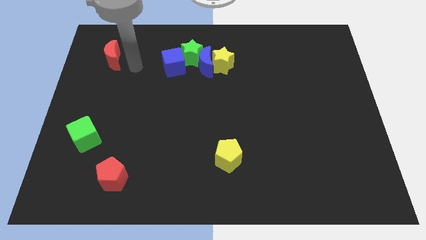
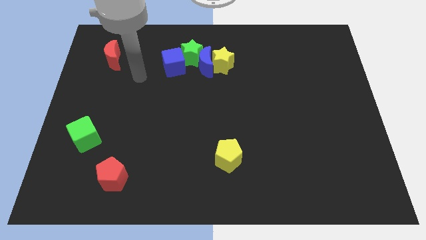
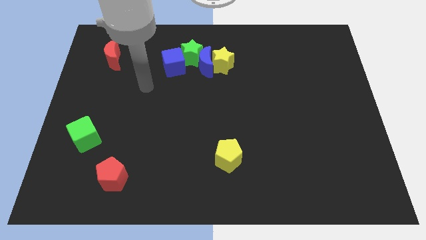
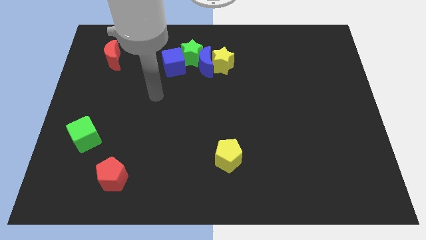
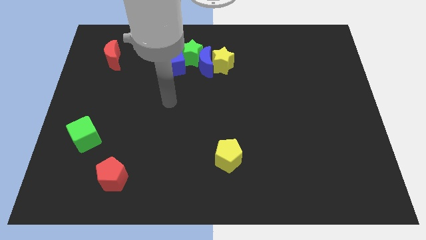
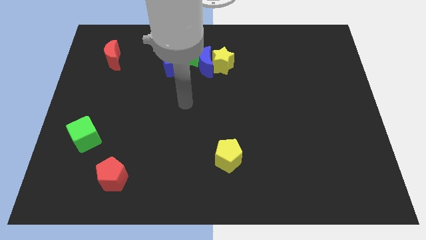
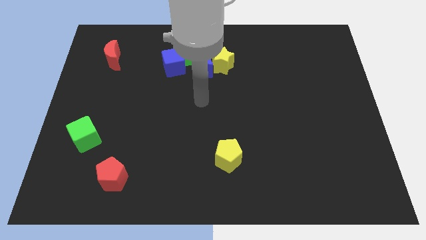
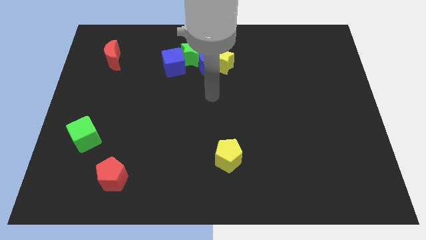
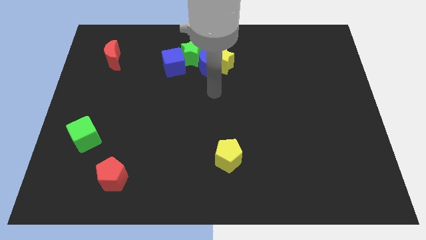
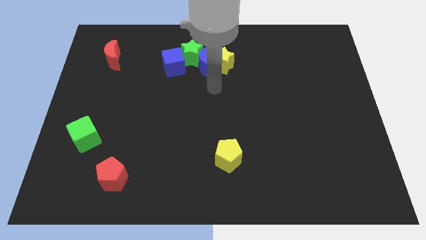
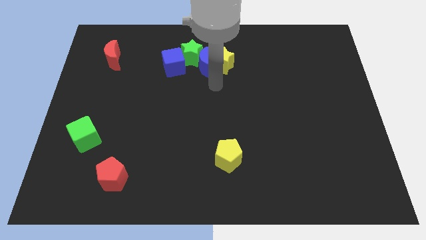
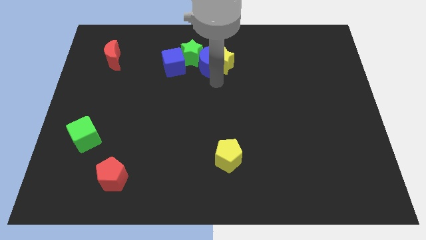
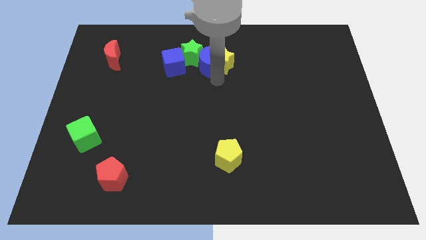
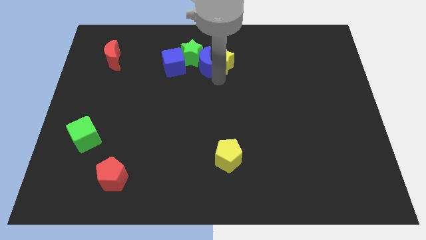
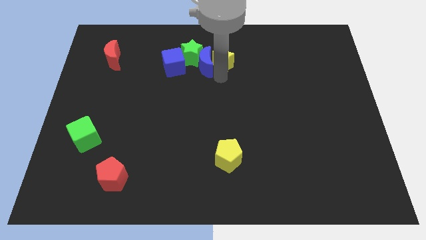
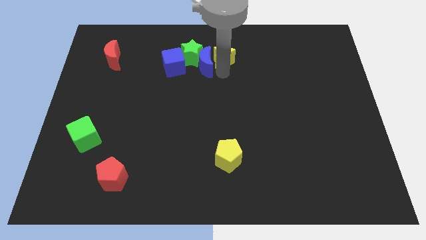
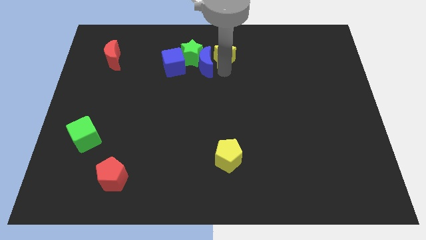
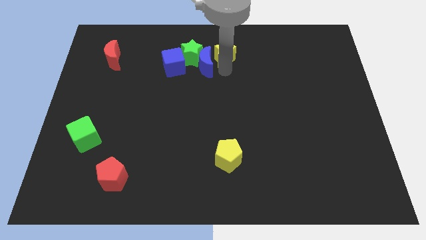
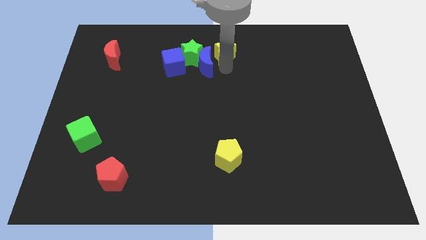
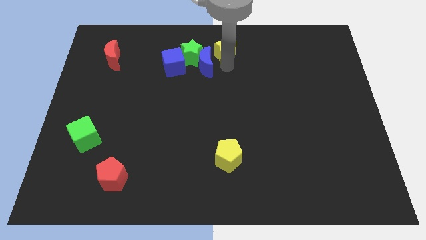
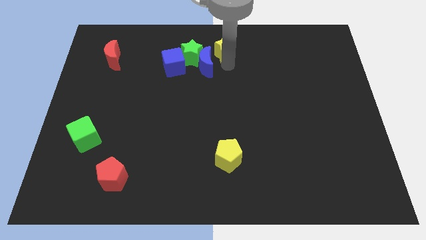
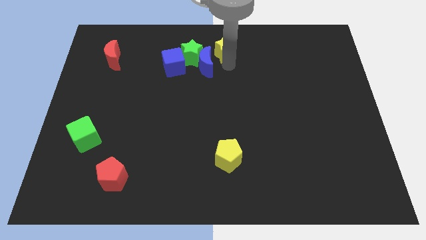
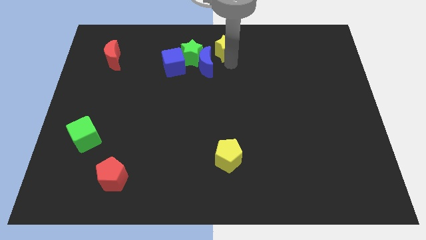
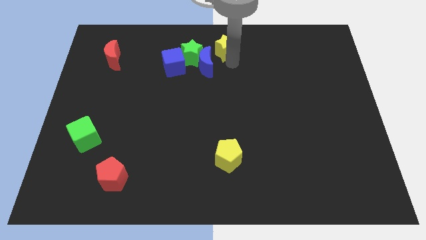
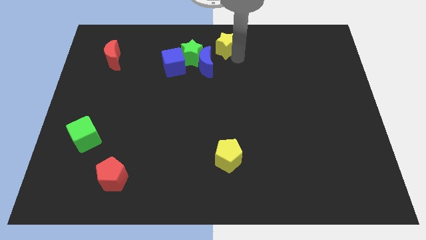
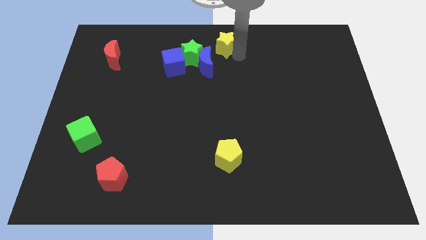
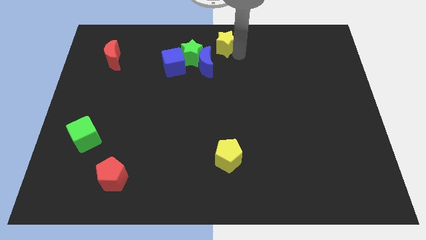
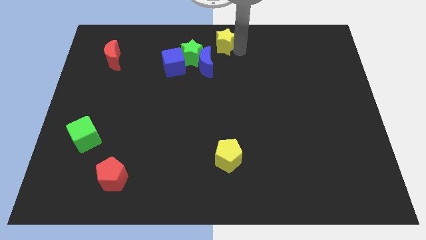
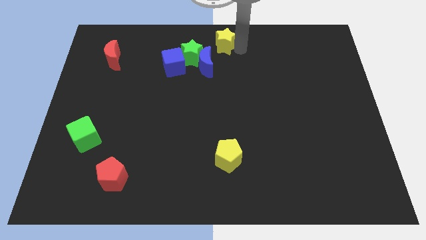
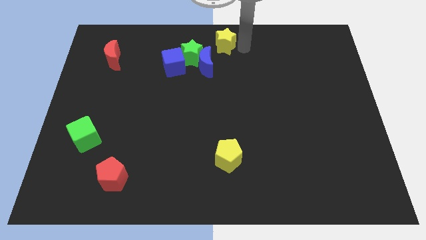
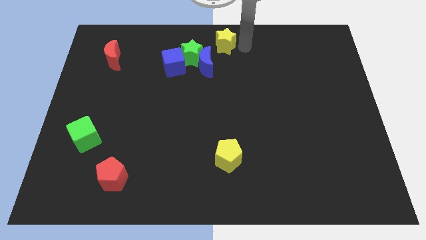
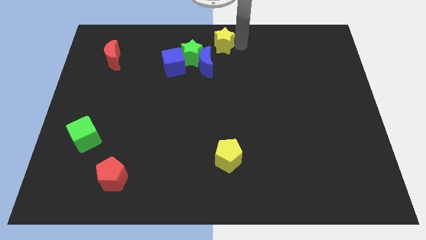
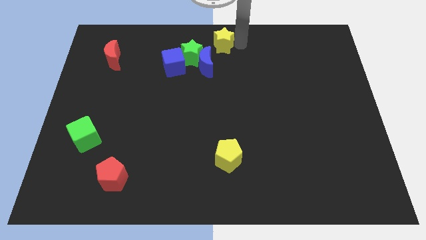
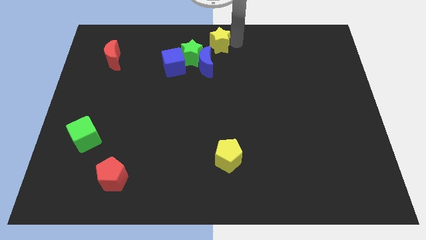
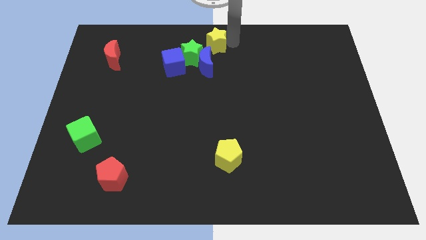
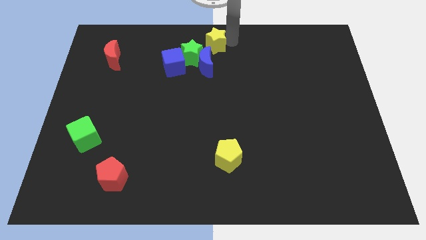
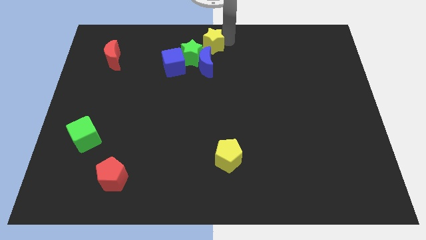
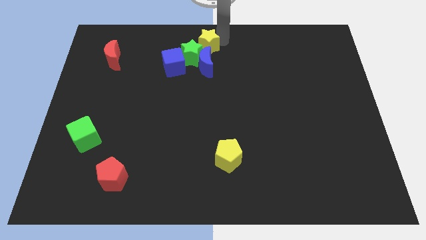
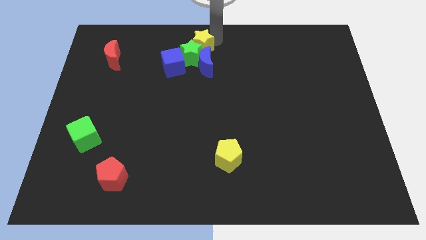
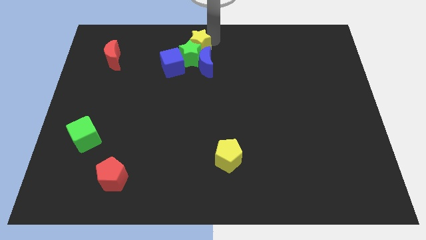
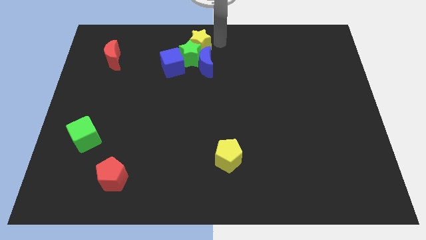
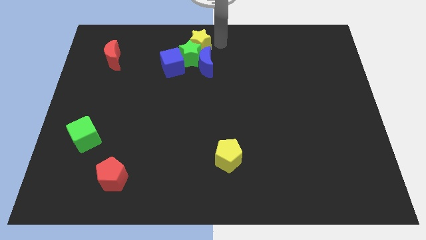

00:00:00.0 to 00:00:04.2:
move the yellow star into the green star

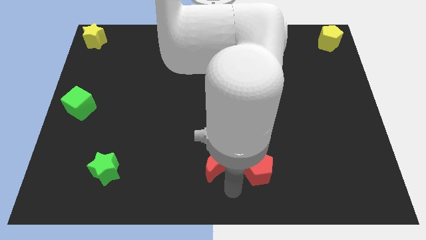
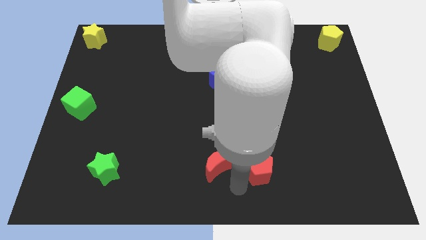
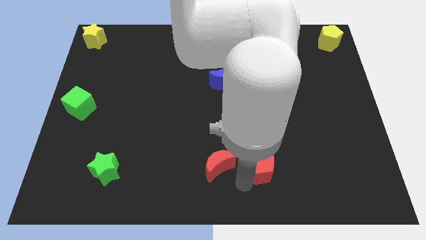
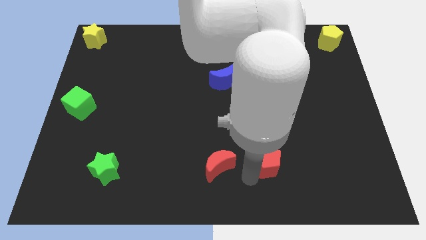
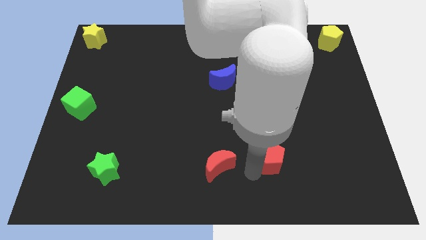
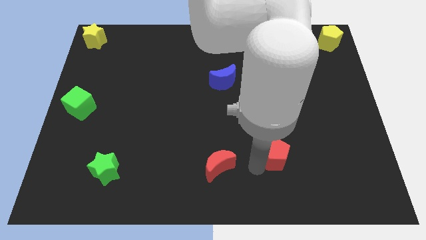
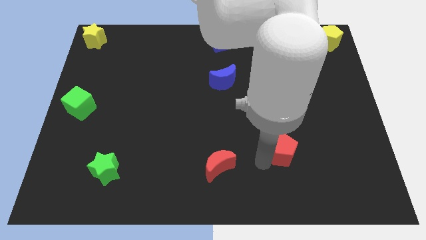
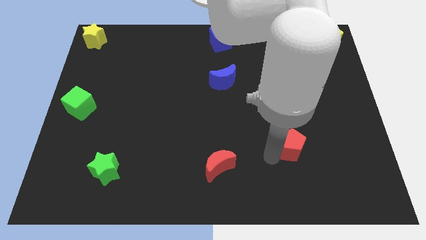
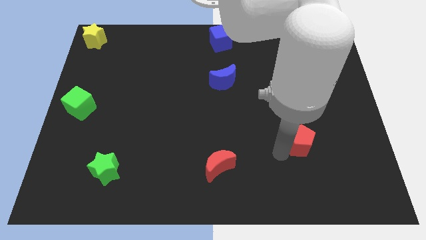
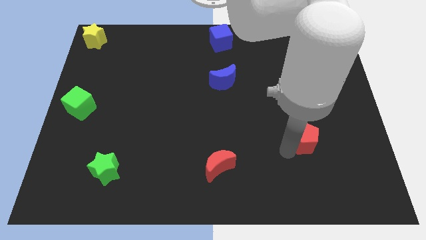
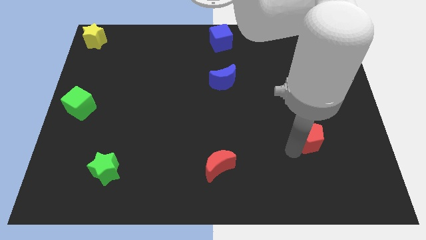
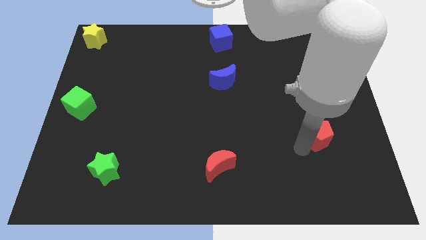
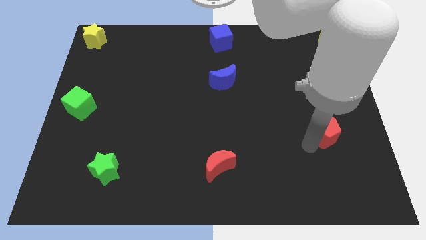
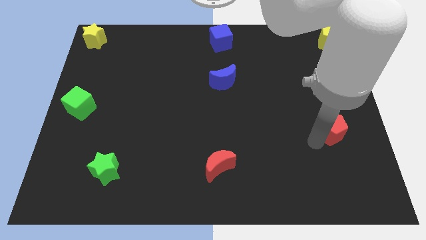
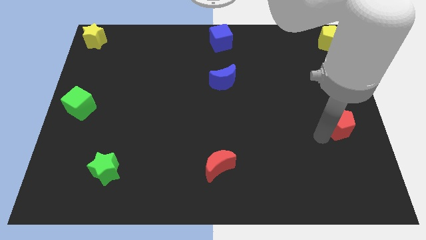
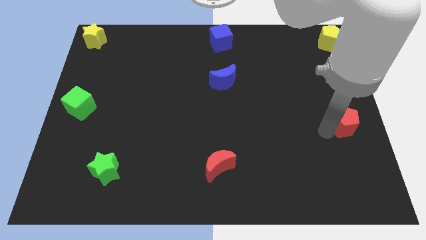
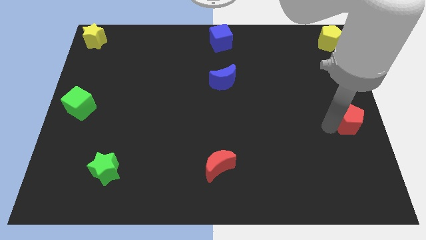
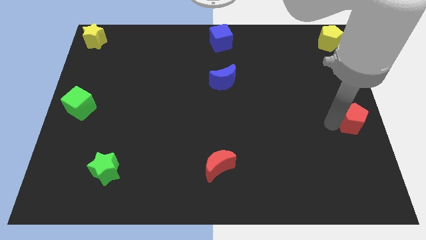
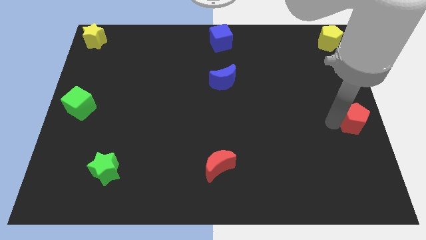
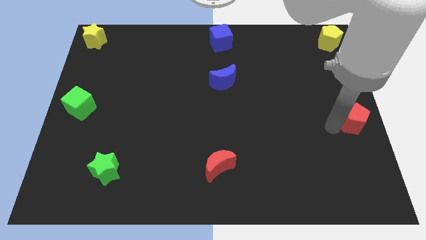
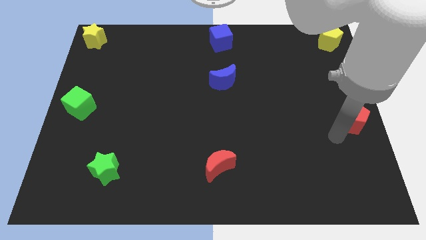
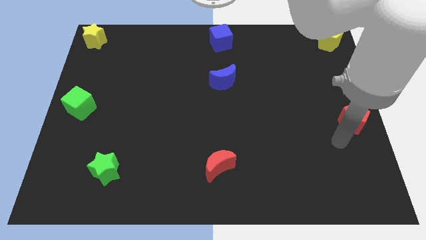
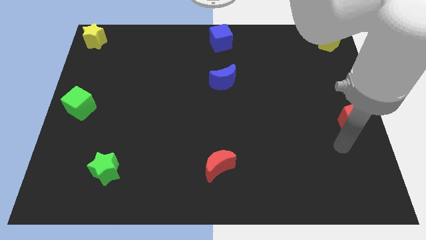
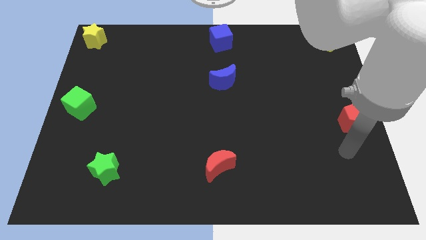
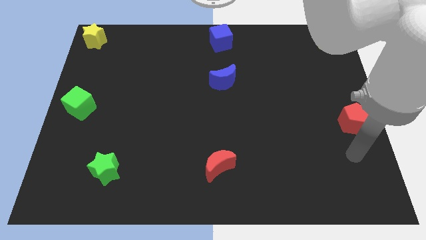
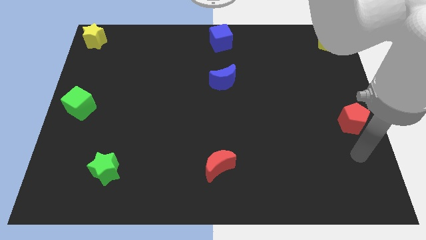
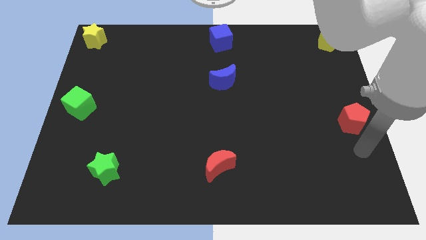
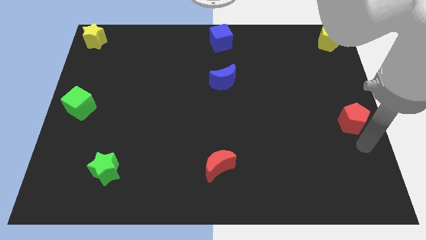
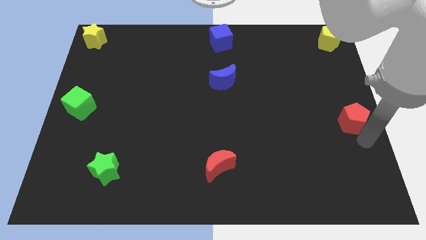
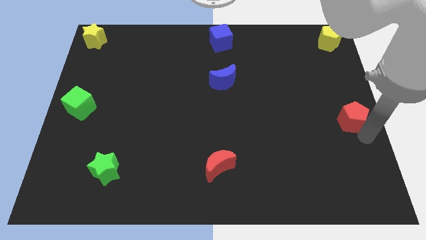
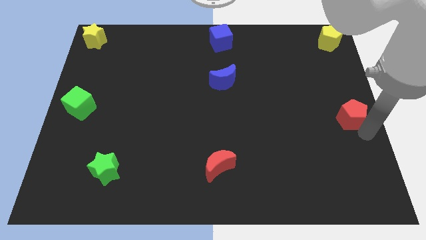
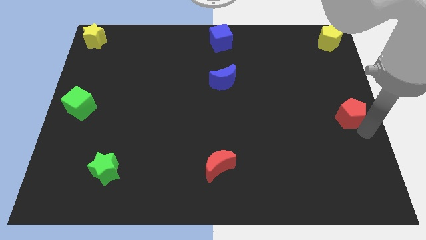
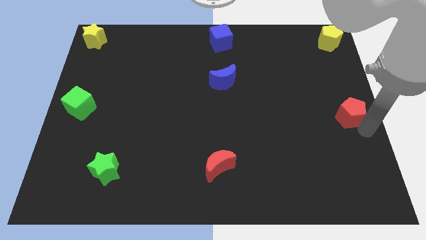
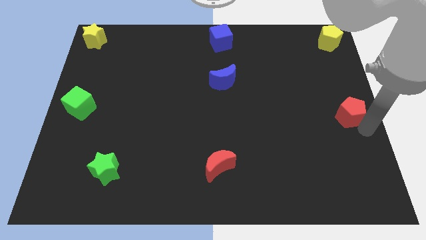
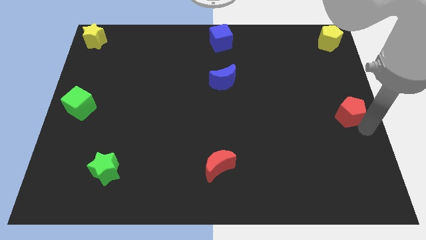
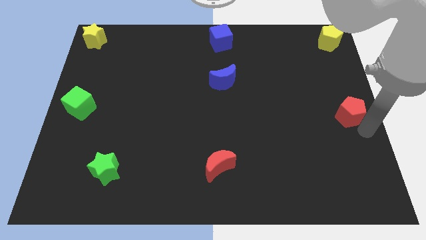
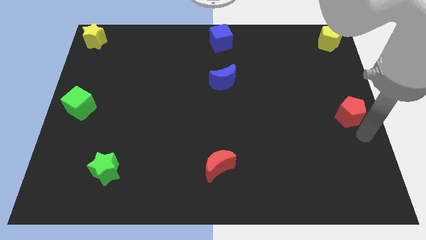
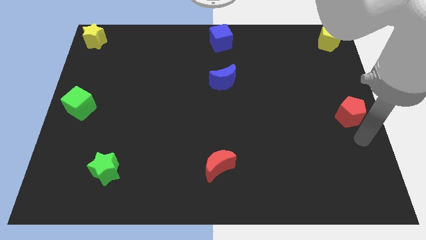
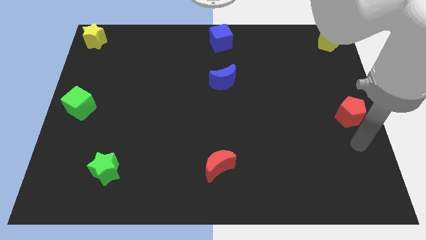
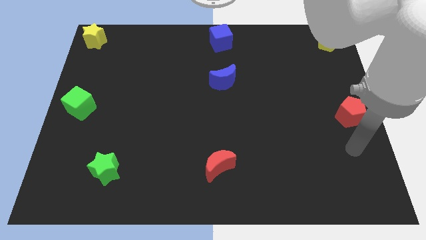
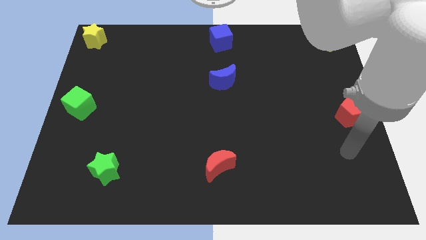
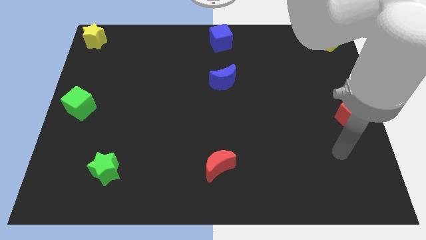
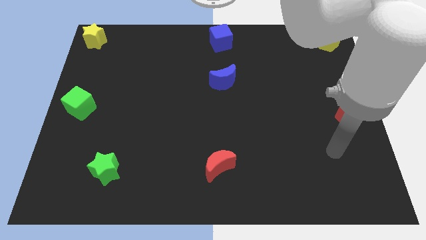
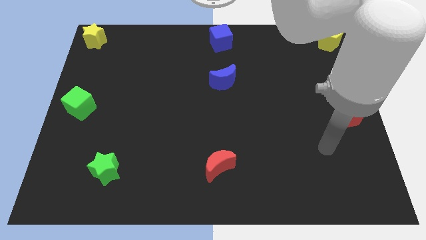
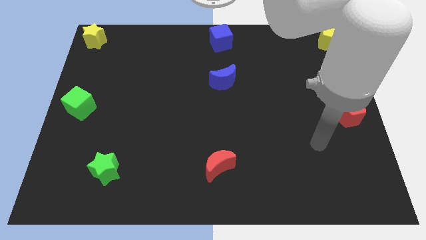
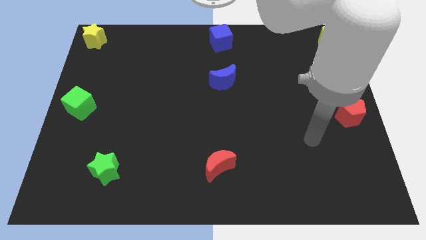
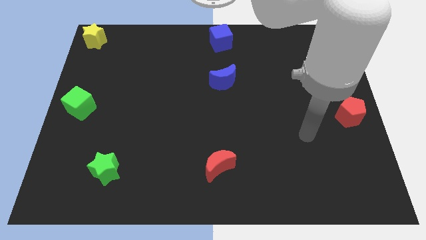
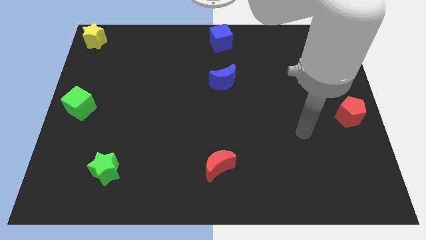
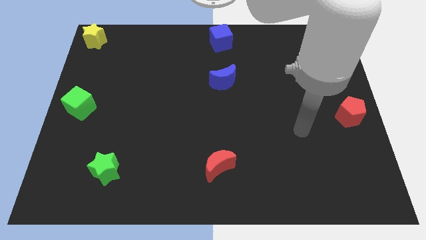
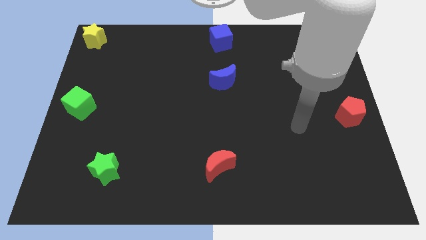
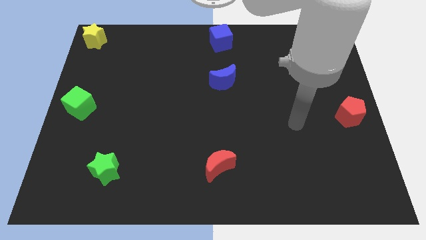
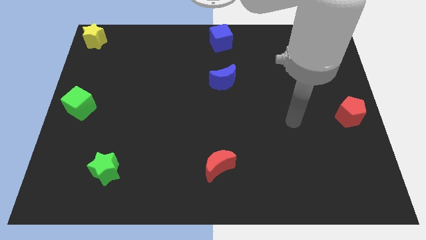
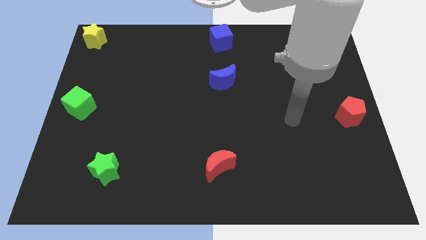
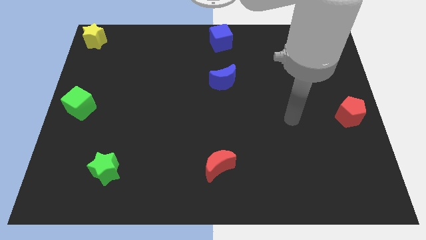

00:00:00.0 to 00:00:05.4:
place red pentagon to the right center of the board
